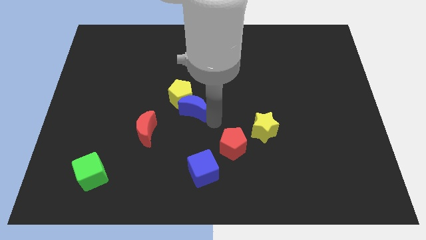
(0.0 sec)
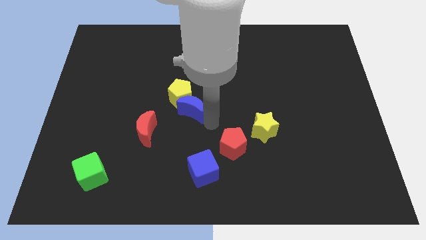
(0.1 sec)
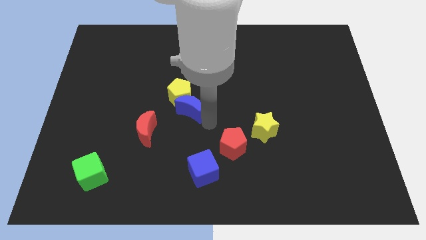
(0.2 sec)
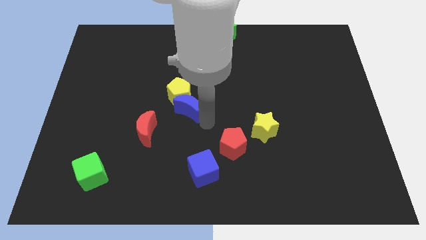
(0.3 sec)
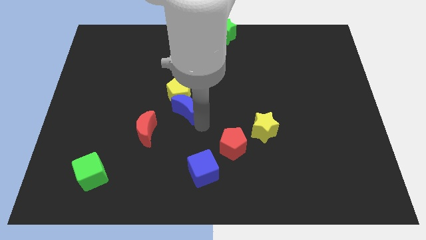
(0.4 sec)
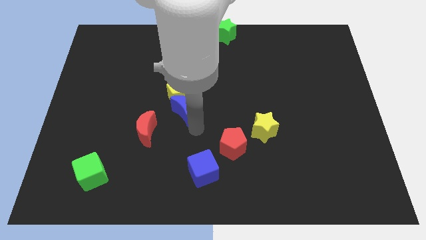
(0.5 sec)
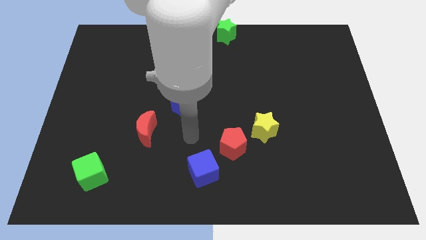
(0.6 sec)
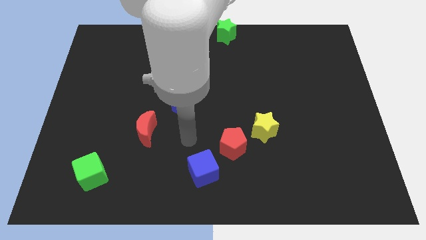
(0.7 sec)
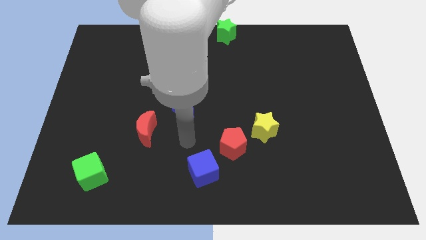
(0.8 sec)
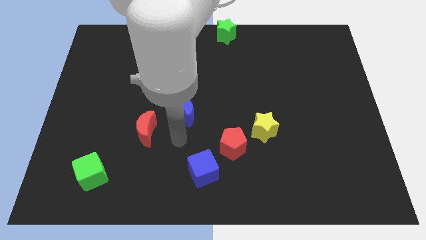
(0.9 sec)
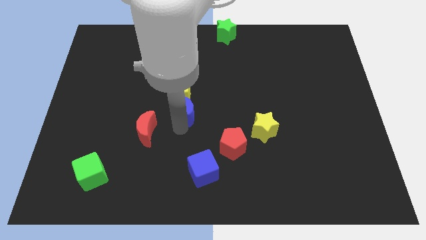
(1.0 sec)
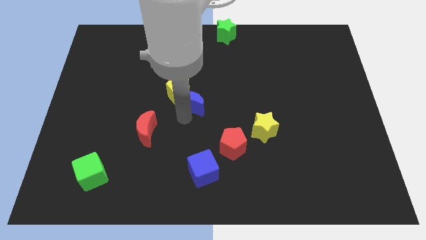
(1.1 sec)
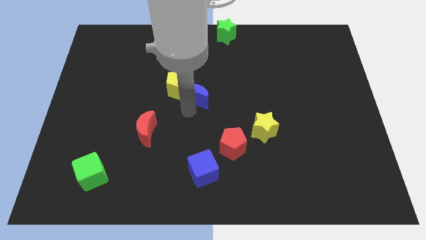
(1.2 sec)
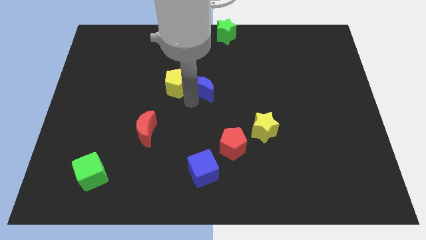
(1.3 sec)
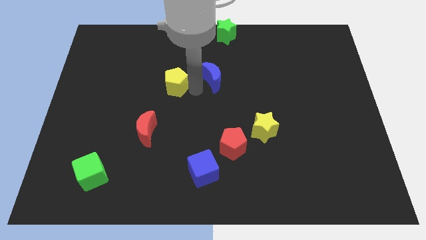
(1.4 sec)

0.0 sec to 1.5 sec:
separate the yellow pentagon from the blue moon

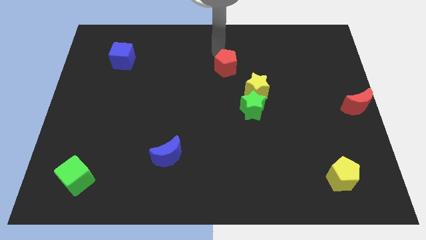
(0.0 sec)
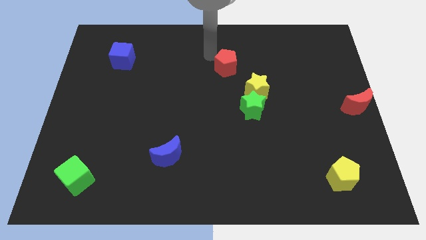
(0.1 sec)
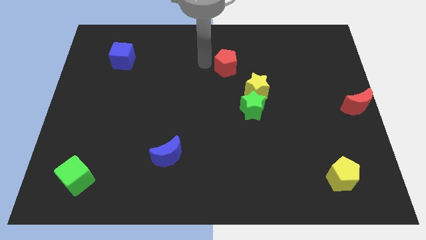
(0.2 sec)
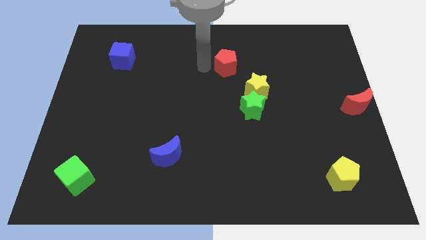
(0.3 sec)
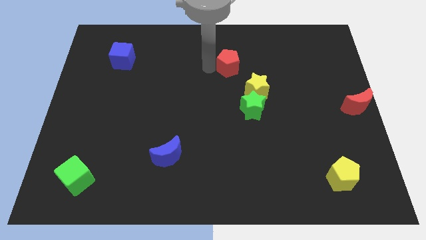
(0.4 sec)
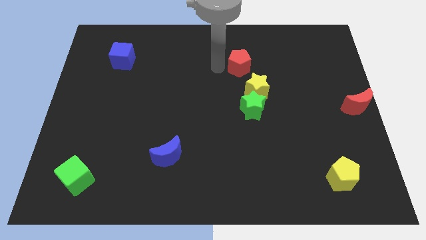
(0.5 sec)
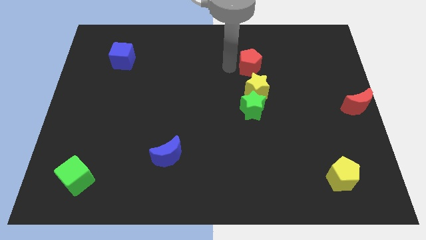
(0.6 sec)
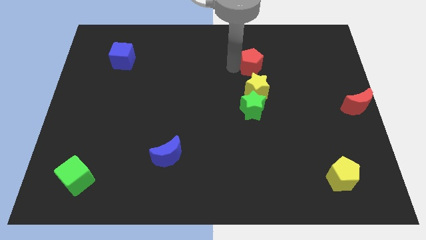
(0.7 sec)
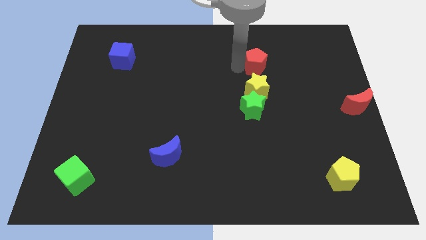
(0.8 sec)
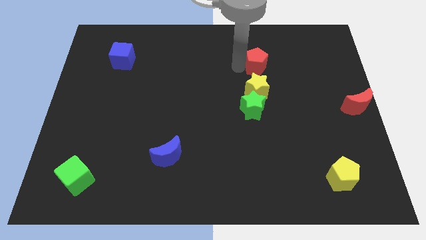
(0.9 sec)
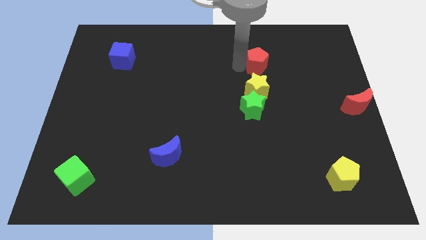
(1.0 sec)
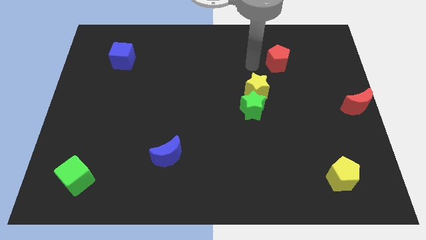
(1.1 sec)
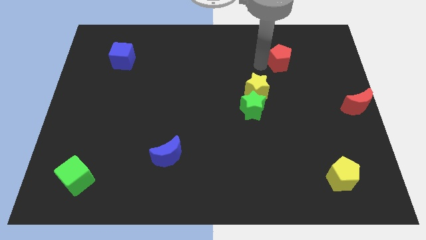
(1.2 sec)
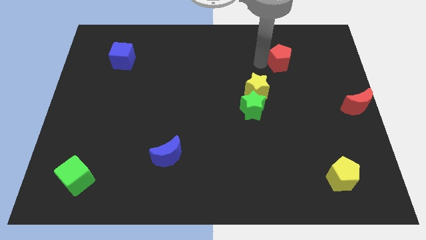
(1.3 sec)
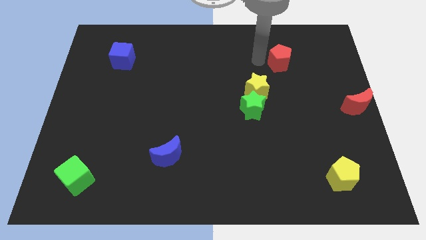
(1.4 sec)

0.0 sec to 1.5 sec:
slide the red pentagon diagonally top right to yellow star

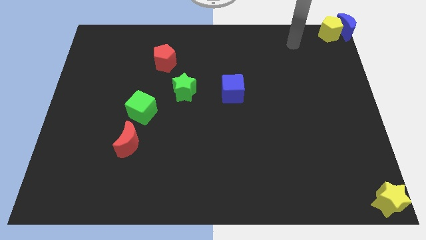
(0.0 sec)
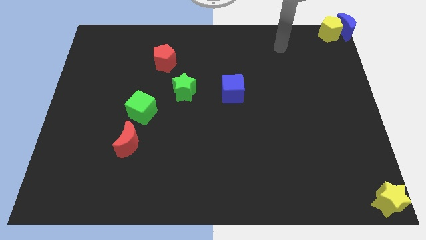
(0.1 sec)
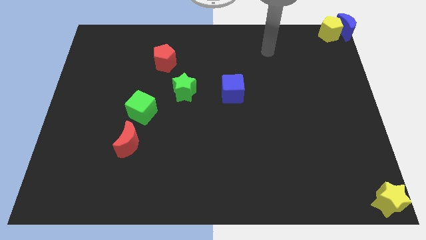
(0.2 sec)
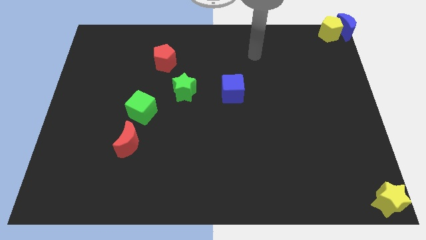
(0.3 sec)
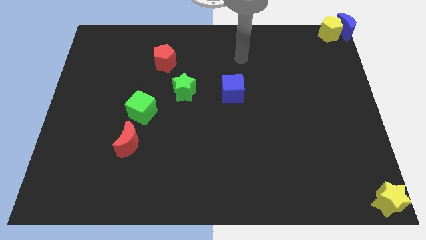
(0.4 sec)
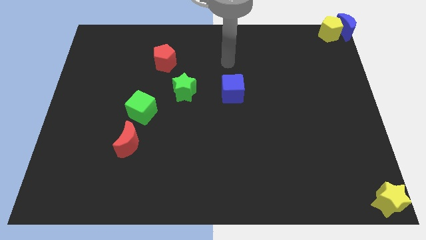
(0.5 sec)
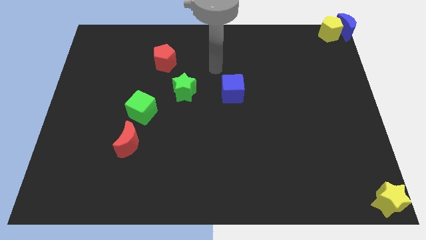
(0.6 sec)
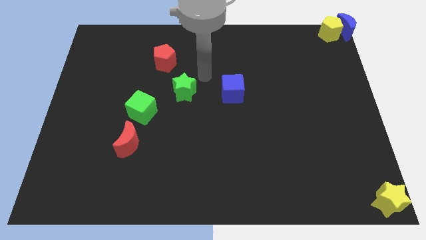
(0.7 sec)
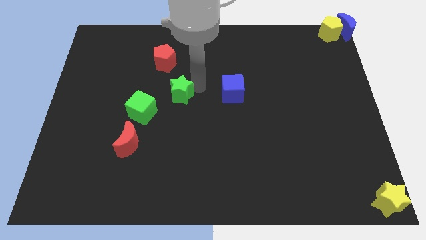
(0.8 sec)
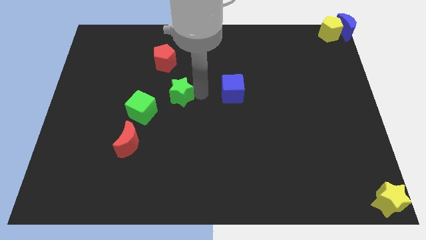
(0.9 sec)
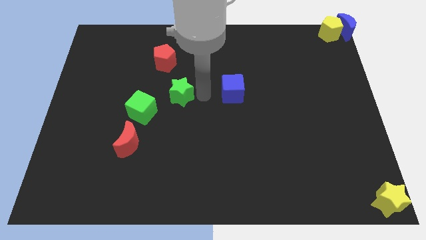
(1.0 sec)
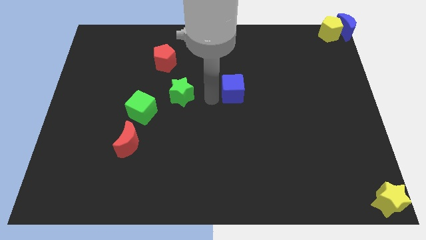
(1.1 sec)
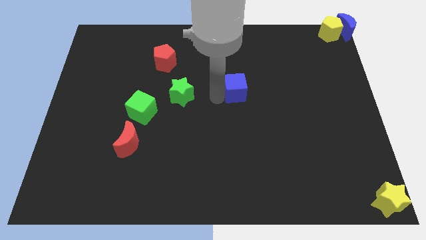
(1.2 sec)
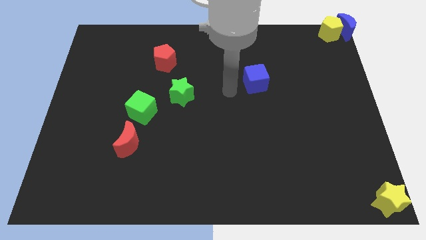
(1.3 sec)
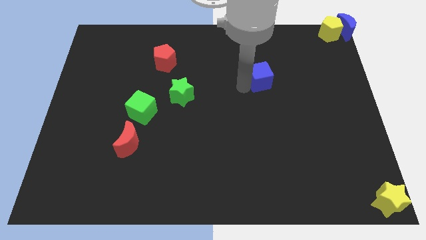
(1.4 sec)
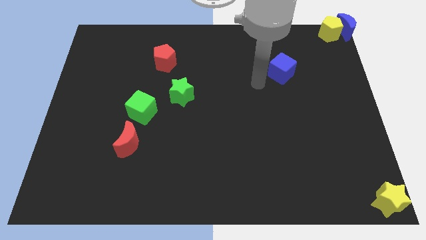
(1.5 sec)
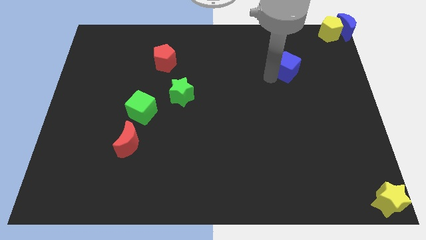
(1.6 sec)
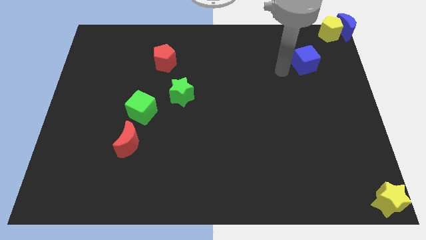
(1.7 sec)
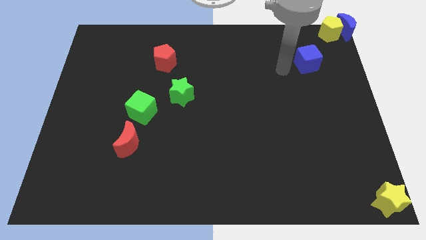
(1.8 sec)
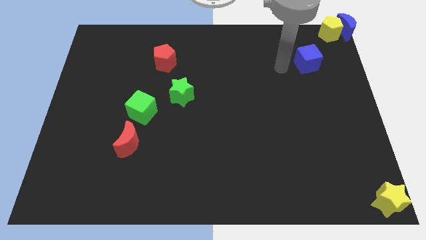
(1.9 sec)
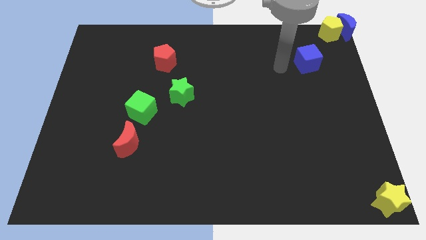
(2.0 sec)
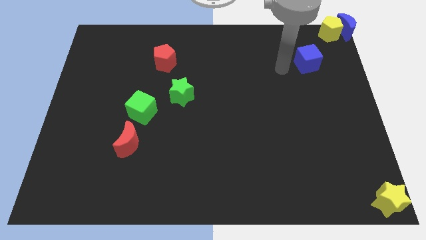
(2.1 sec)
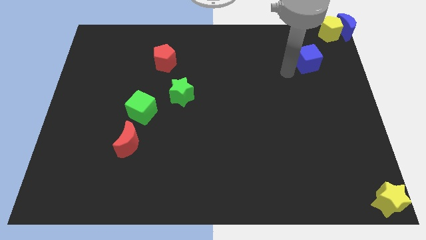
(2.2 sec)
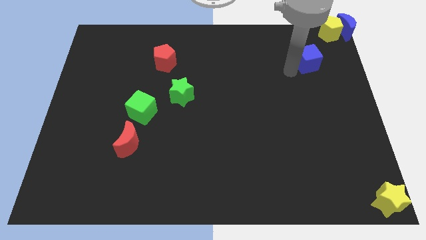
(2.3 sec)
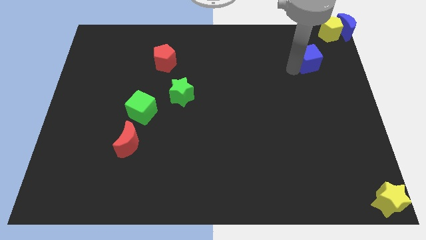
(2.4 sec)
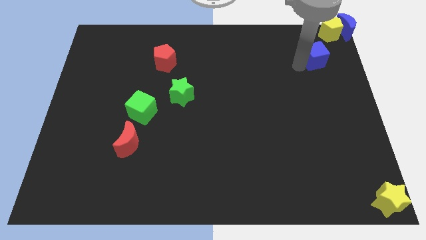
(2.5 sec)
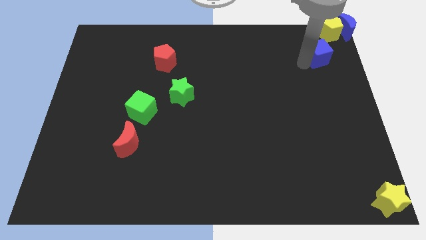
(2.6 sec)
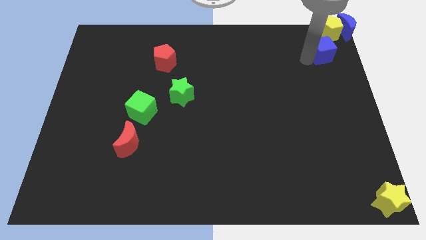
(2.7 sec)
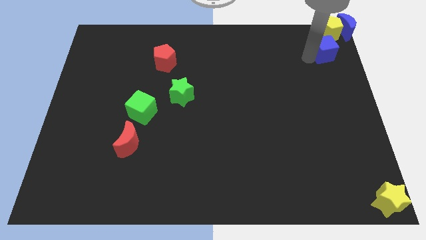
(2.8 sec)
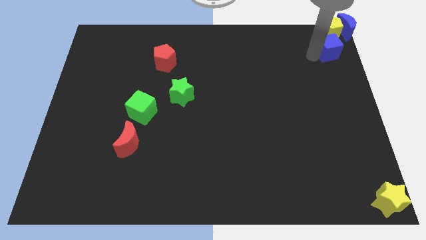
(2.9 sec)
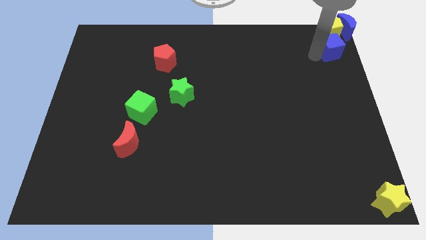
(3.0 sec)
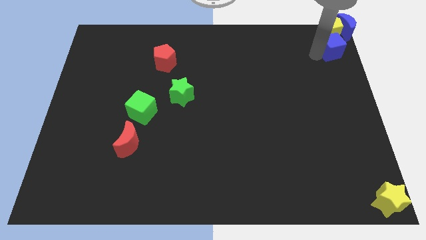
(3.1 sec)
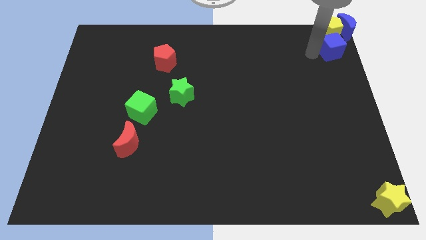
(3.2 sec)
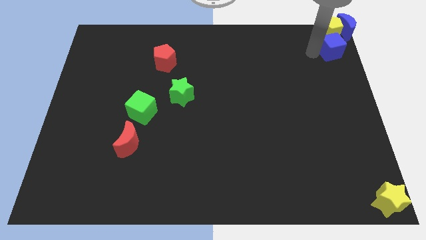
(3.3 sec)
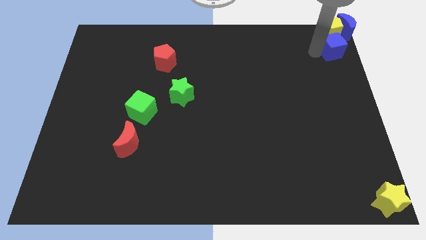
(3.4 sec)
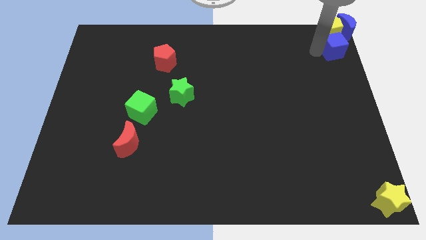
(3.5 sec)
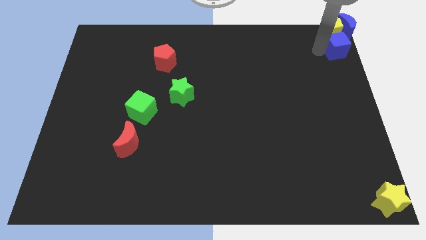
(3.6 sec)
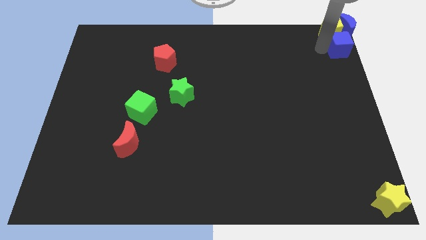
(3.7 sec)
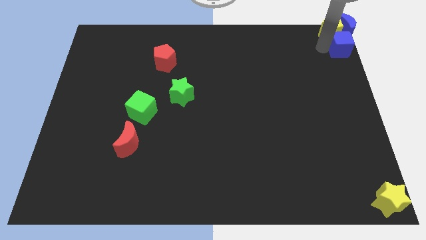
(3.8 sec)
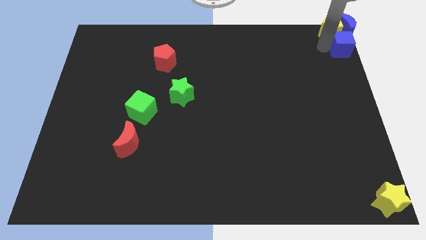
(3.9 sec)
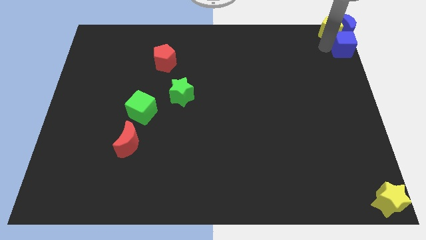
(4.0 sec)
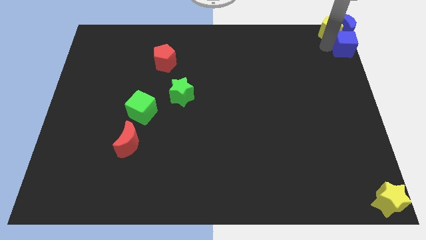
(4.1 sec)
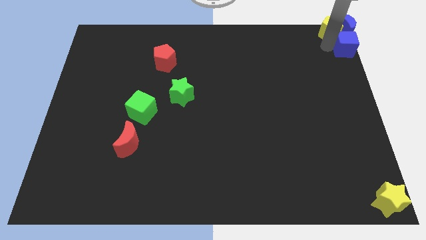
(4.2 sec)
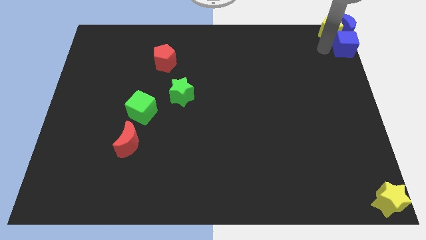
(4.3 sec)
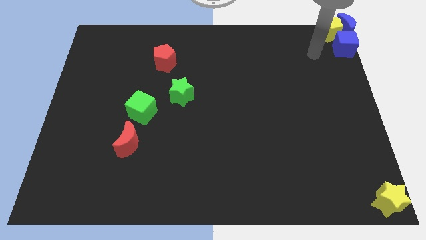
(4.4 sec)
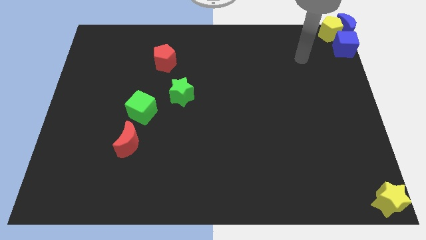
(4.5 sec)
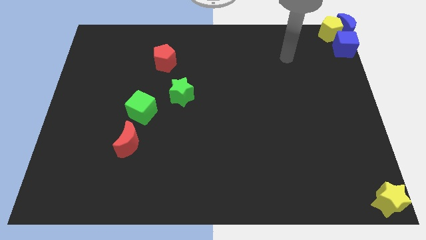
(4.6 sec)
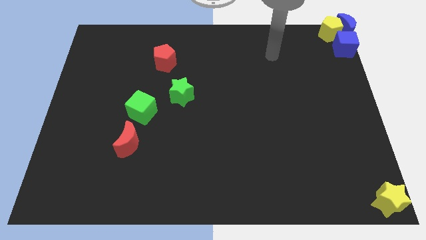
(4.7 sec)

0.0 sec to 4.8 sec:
push the blue cube below to the blue crescent

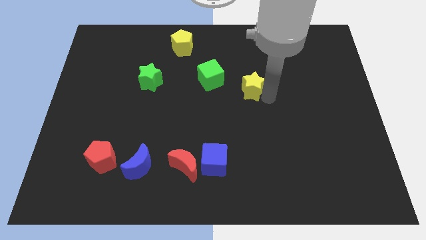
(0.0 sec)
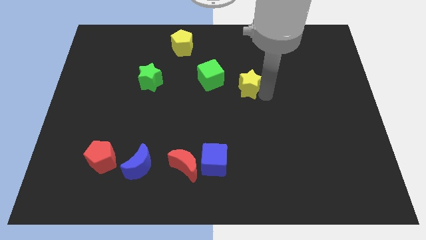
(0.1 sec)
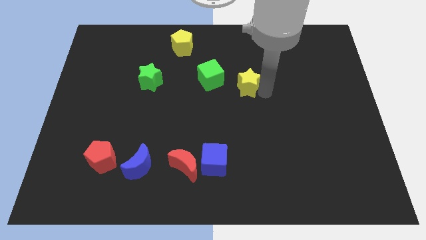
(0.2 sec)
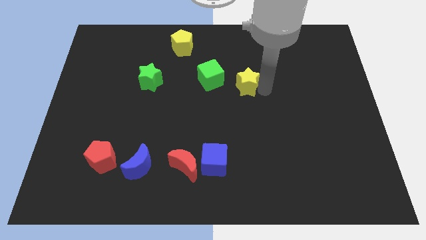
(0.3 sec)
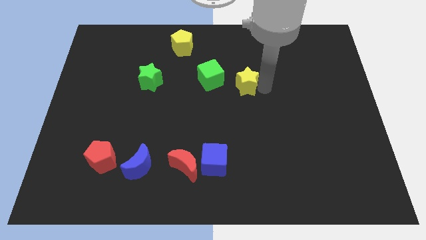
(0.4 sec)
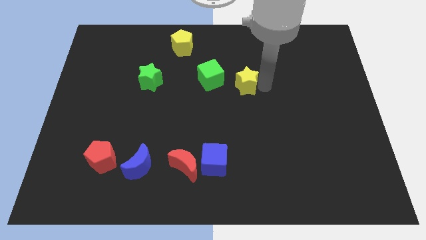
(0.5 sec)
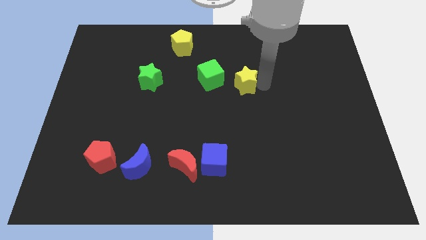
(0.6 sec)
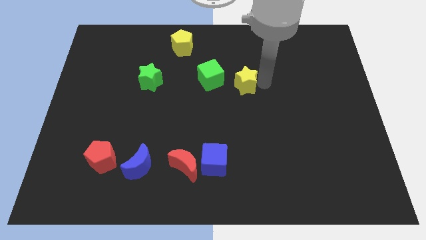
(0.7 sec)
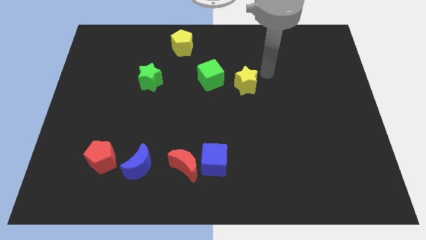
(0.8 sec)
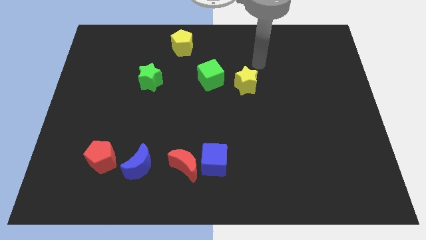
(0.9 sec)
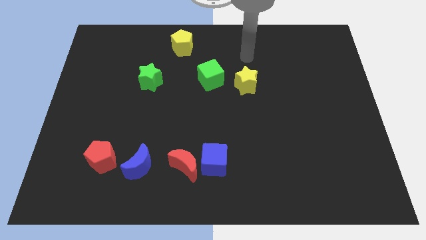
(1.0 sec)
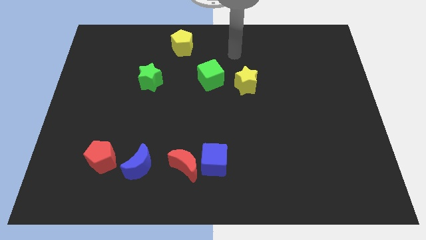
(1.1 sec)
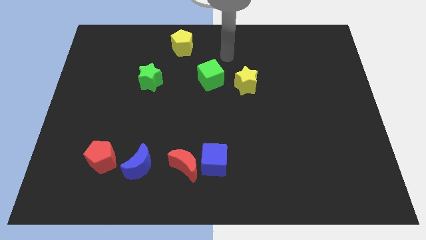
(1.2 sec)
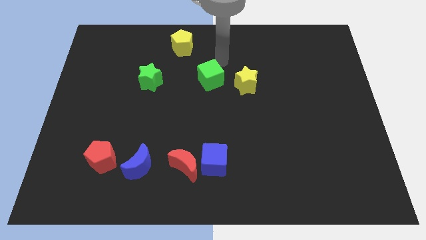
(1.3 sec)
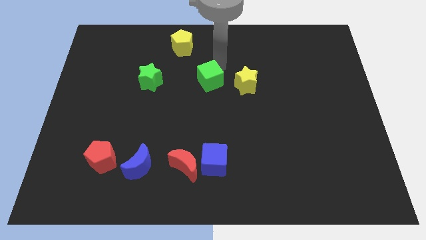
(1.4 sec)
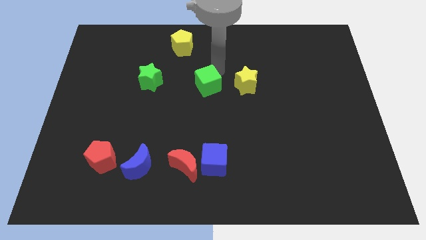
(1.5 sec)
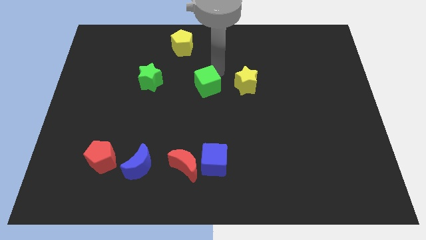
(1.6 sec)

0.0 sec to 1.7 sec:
adjust the yellow star and green cube to the right of green star
